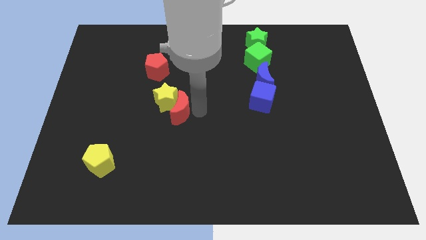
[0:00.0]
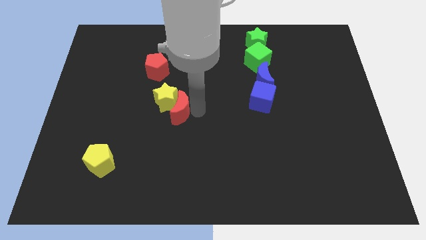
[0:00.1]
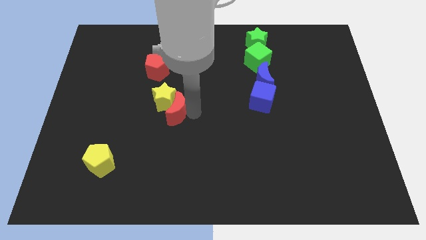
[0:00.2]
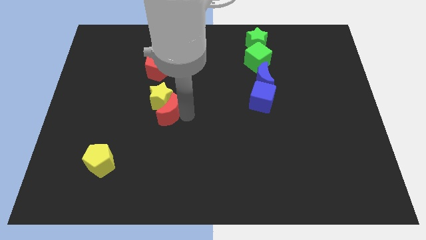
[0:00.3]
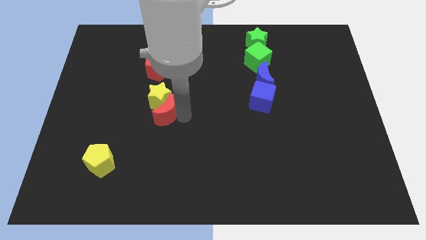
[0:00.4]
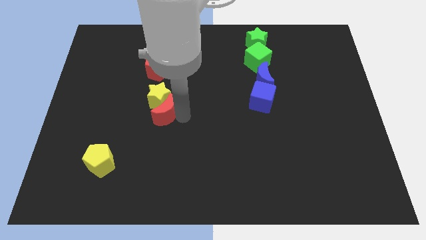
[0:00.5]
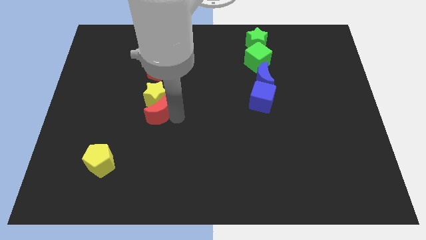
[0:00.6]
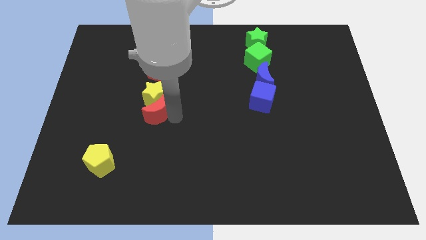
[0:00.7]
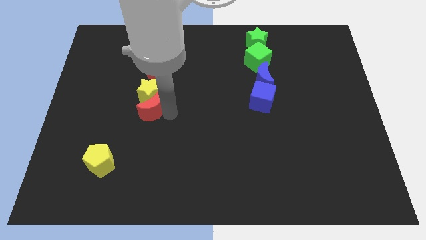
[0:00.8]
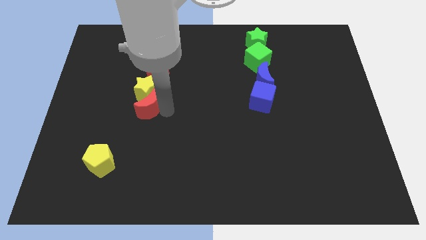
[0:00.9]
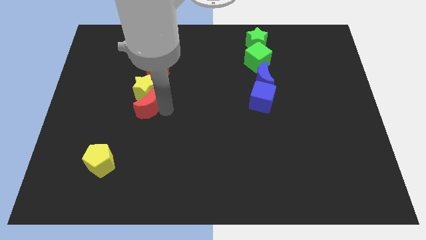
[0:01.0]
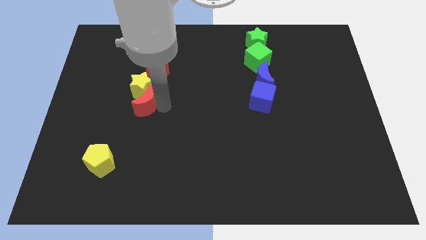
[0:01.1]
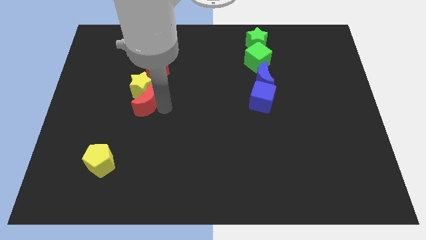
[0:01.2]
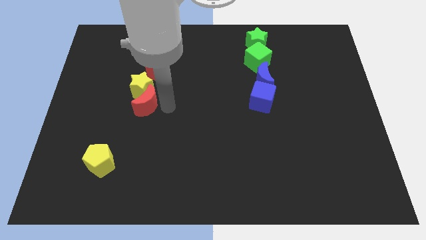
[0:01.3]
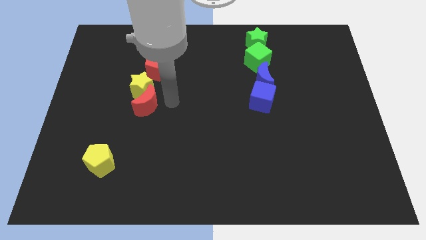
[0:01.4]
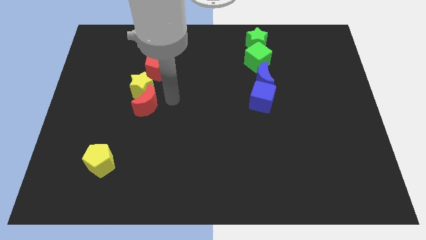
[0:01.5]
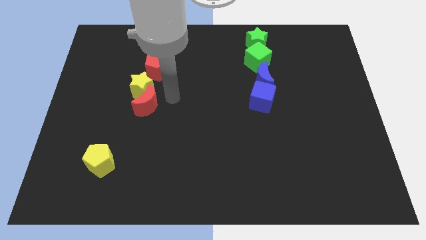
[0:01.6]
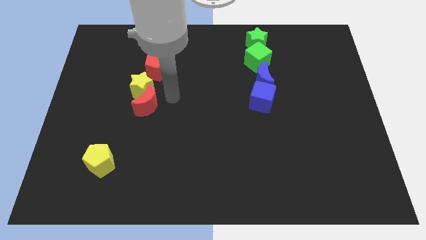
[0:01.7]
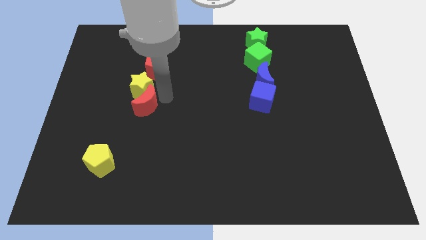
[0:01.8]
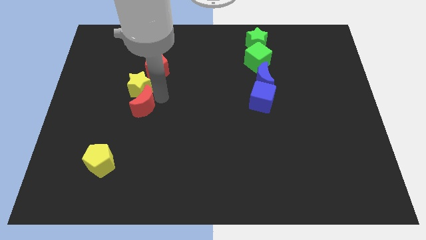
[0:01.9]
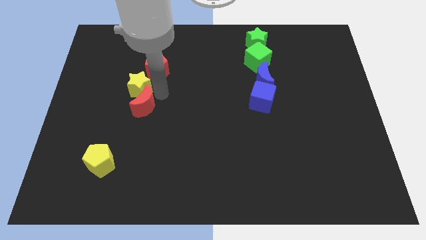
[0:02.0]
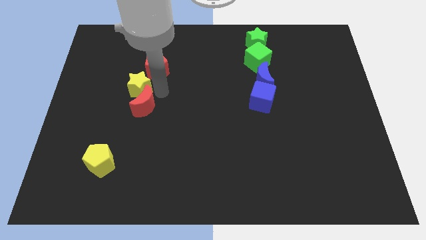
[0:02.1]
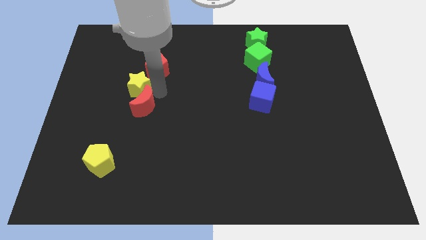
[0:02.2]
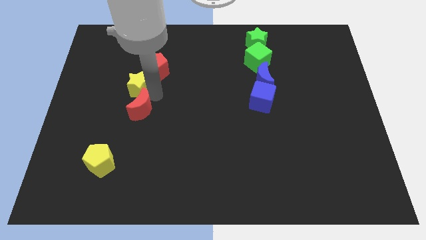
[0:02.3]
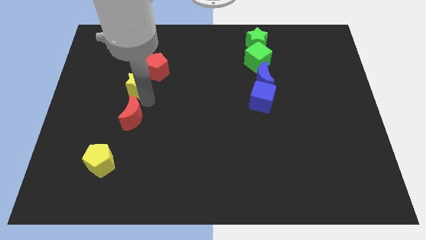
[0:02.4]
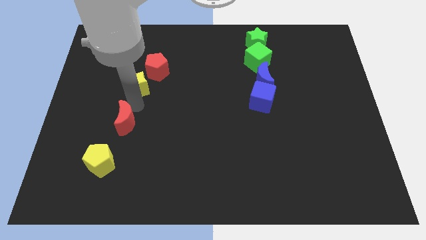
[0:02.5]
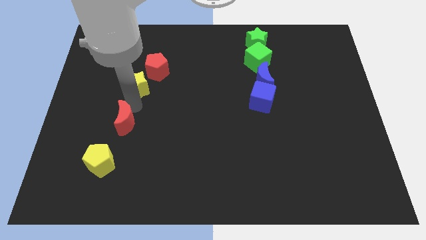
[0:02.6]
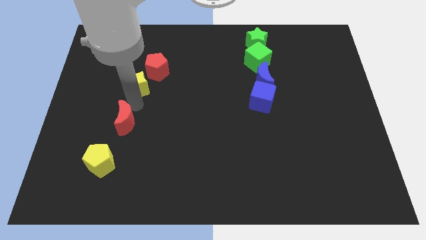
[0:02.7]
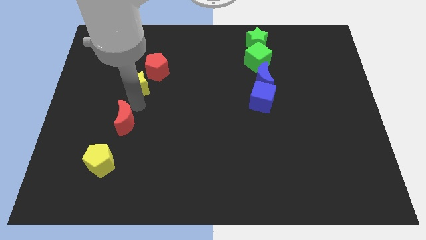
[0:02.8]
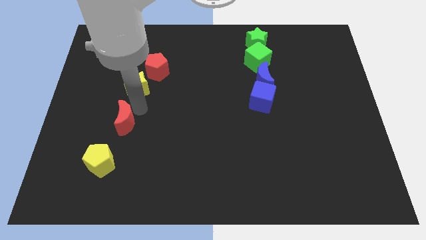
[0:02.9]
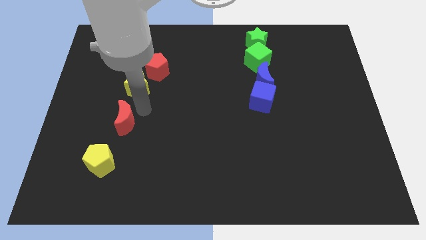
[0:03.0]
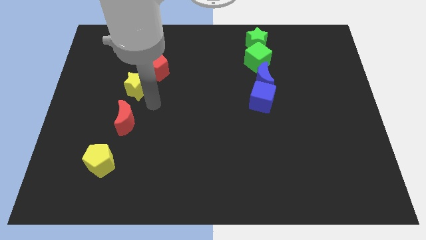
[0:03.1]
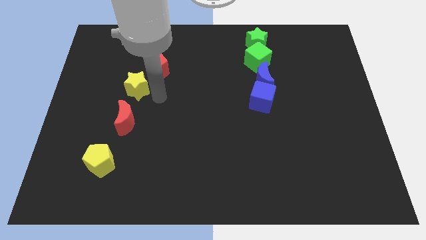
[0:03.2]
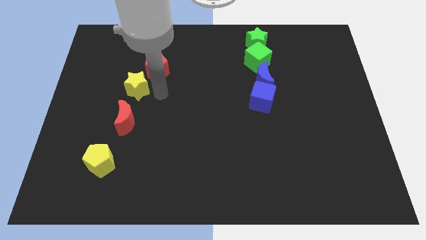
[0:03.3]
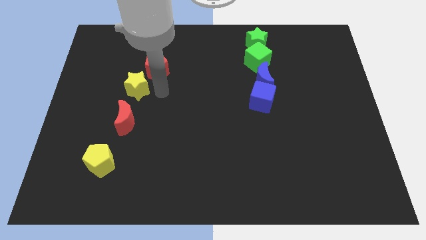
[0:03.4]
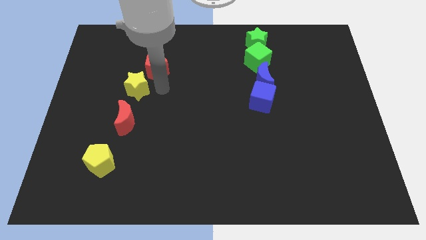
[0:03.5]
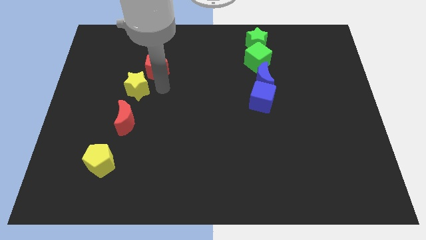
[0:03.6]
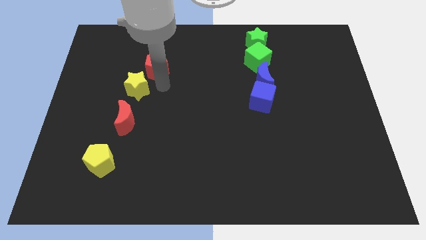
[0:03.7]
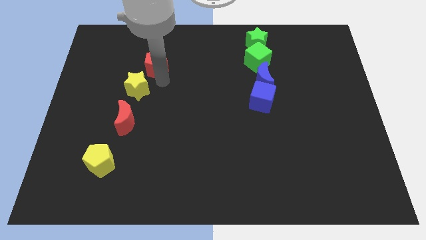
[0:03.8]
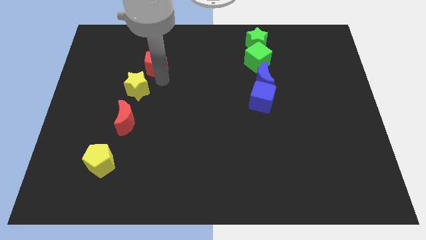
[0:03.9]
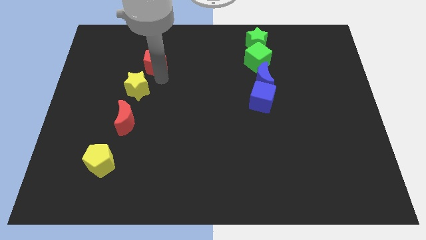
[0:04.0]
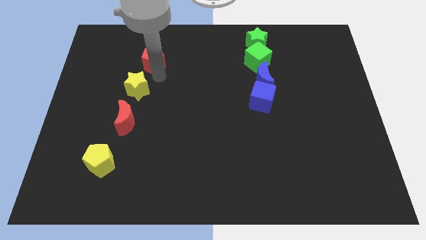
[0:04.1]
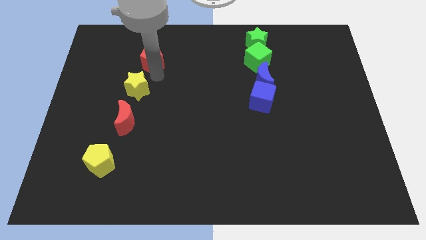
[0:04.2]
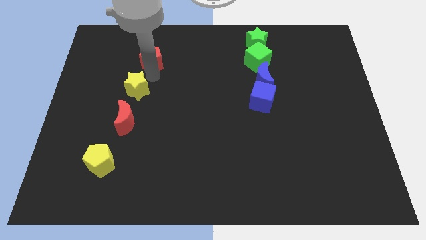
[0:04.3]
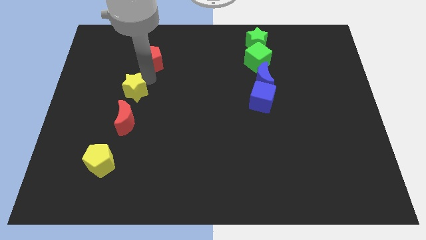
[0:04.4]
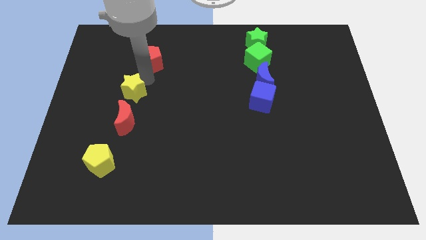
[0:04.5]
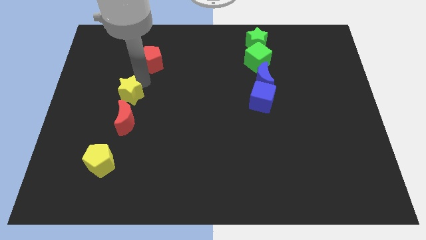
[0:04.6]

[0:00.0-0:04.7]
separate the yellow star and the red crescent

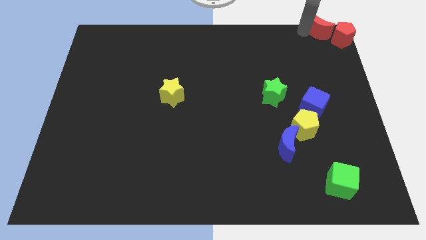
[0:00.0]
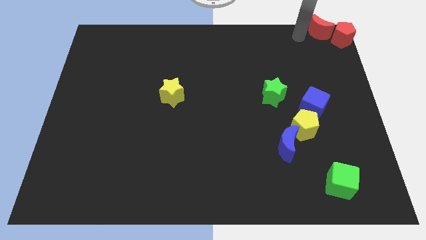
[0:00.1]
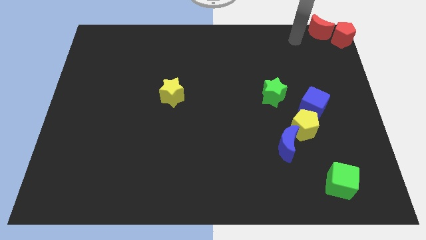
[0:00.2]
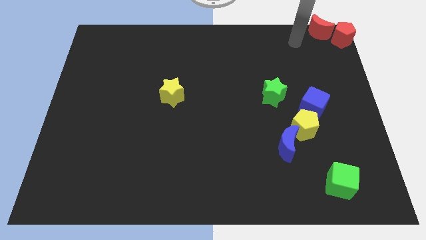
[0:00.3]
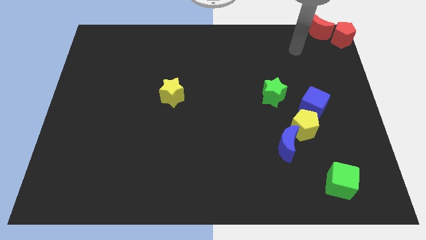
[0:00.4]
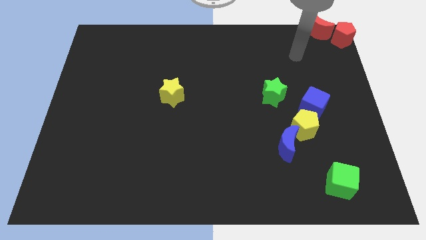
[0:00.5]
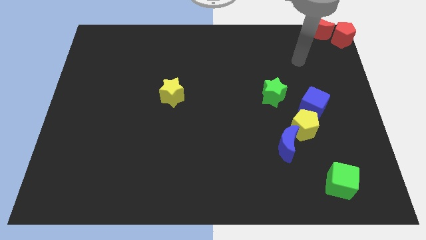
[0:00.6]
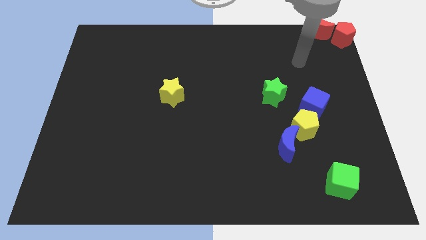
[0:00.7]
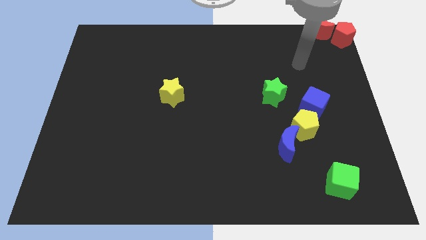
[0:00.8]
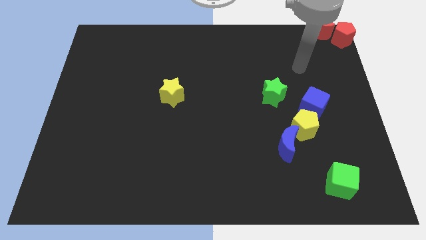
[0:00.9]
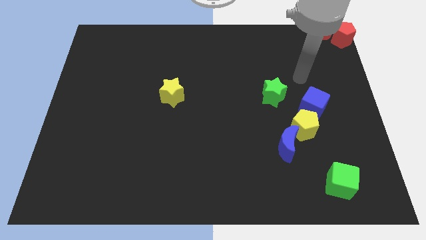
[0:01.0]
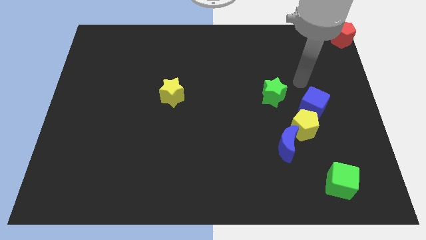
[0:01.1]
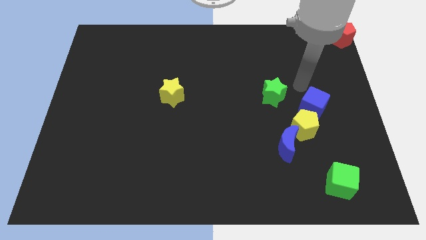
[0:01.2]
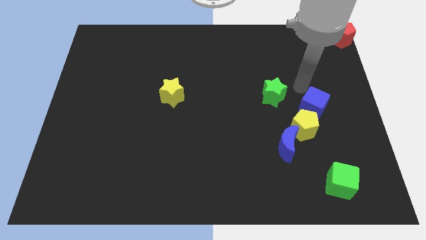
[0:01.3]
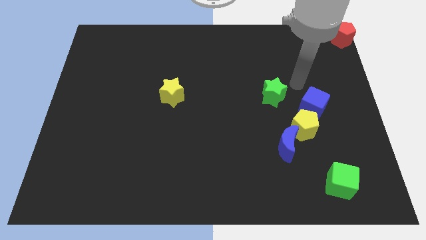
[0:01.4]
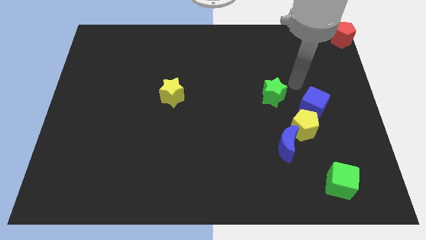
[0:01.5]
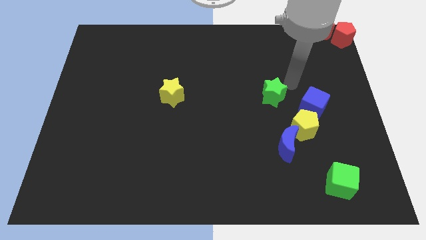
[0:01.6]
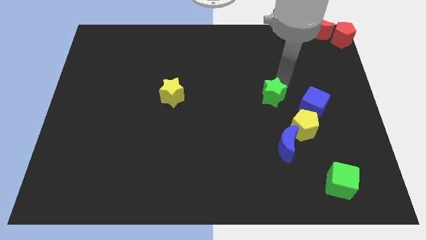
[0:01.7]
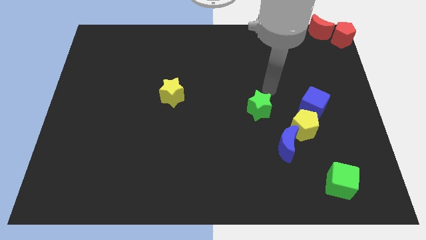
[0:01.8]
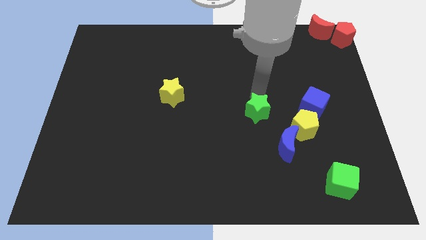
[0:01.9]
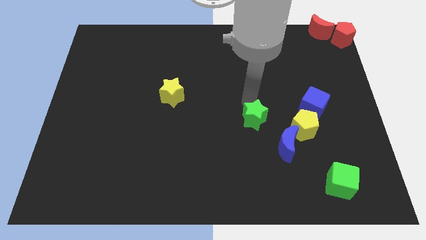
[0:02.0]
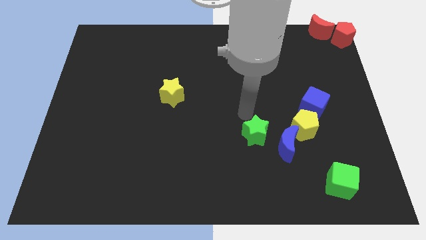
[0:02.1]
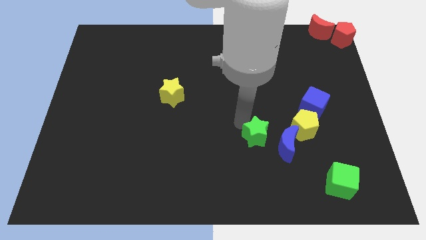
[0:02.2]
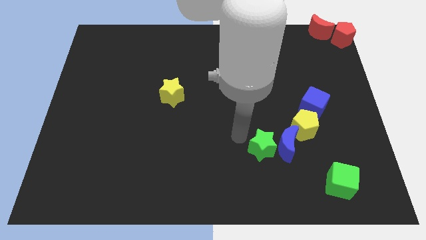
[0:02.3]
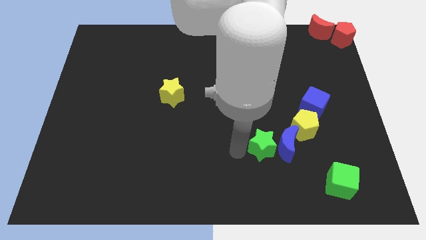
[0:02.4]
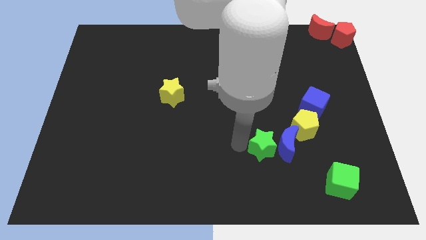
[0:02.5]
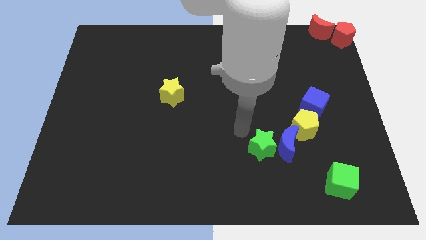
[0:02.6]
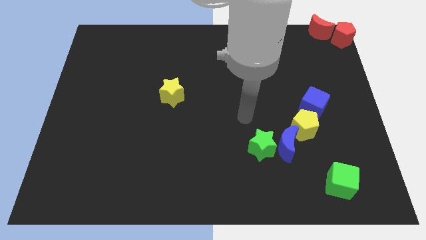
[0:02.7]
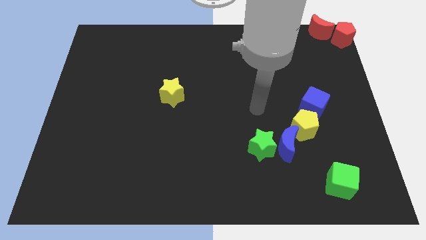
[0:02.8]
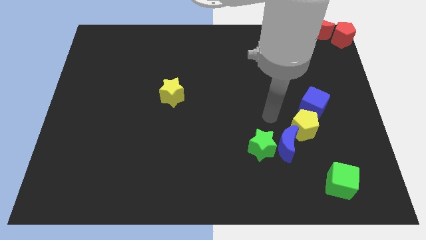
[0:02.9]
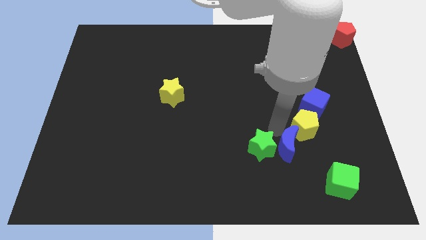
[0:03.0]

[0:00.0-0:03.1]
move the green star to the left of the blue moon

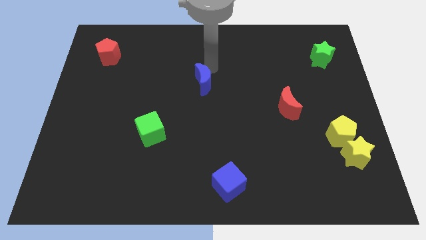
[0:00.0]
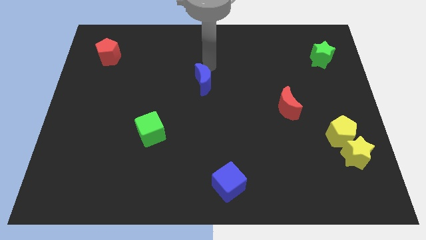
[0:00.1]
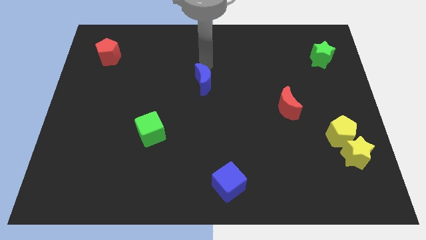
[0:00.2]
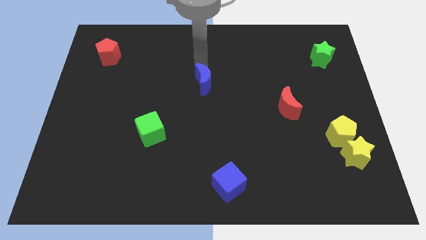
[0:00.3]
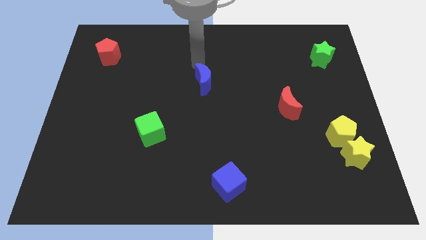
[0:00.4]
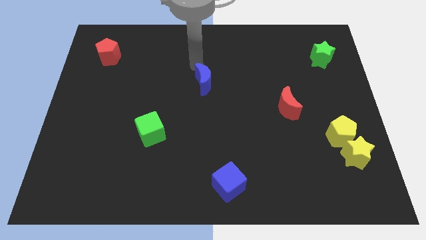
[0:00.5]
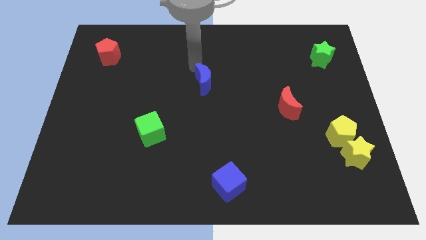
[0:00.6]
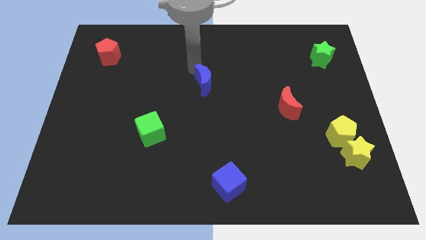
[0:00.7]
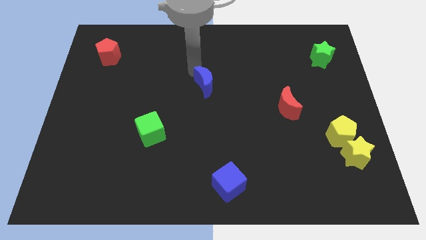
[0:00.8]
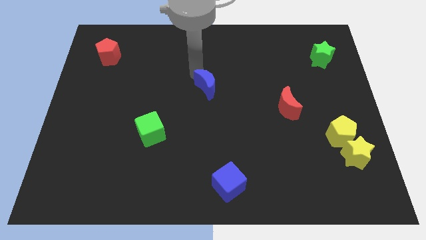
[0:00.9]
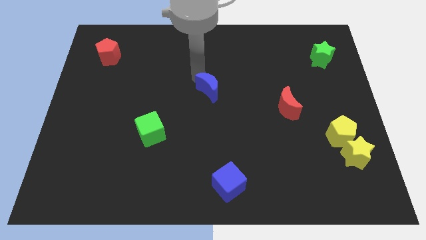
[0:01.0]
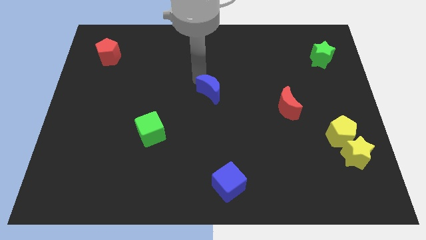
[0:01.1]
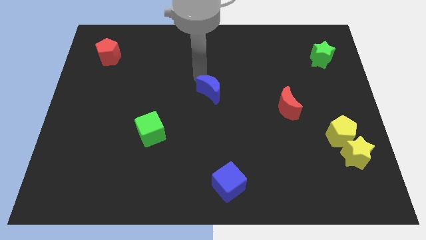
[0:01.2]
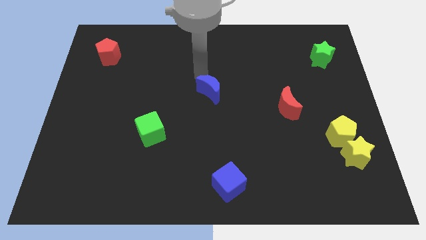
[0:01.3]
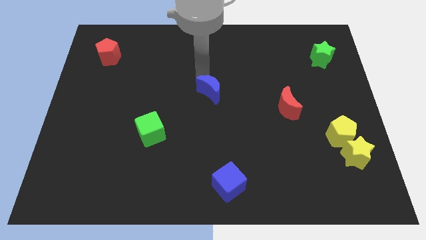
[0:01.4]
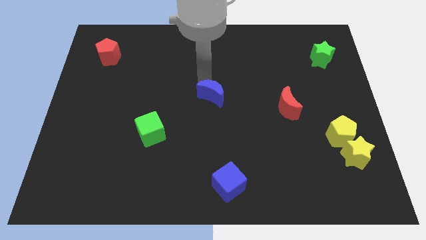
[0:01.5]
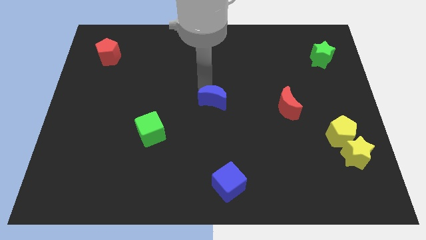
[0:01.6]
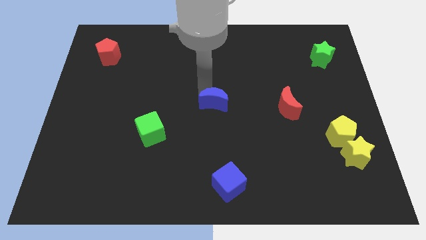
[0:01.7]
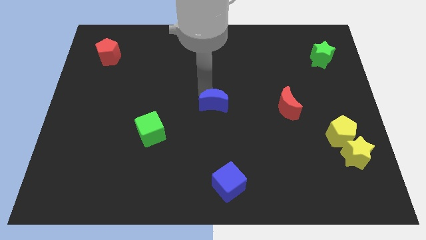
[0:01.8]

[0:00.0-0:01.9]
place the blue crescent at center of the board
